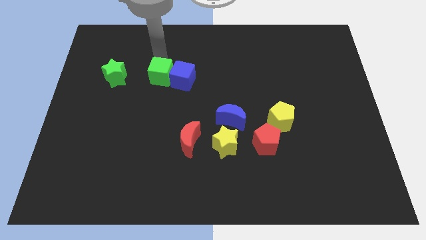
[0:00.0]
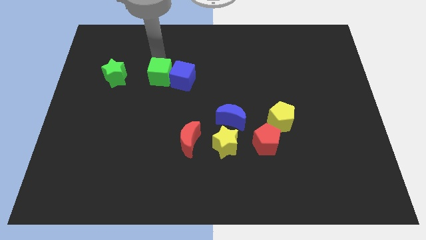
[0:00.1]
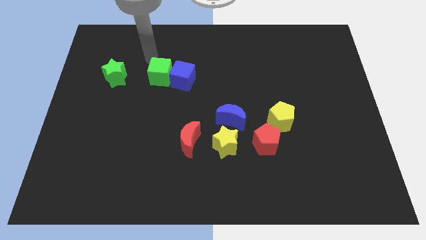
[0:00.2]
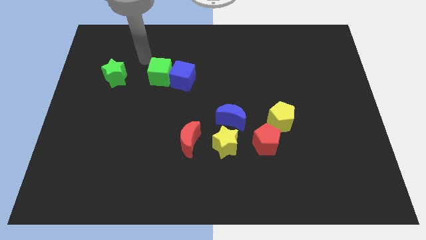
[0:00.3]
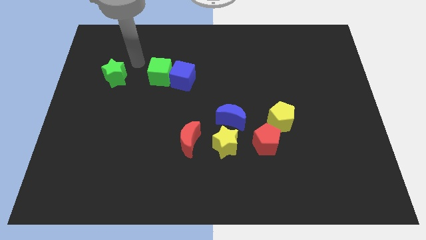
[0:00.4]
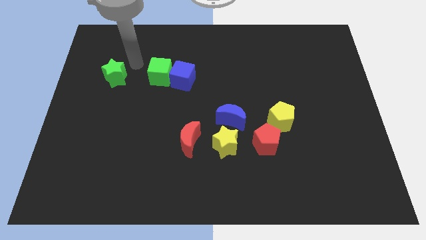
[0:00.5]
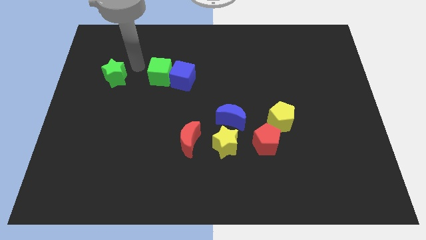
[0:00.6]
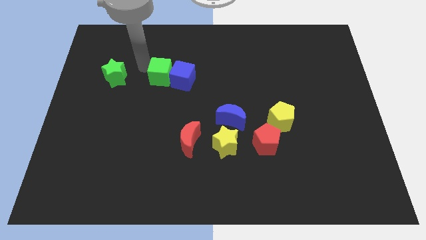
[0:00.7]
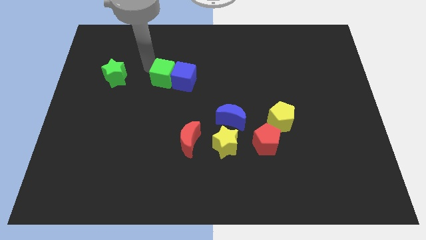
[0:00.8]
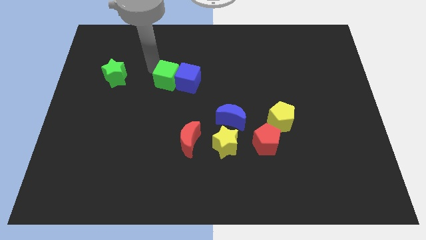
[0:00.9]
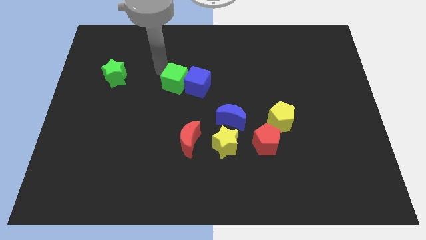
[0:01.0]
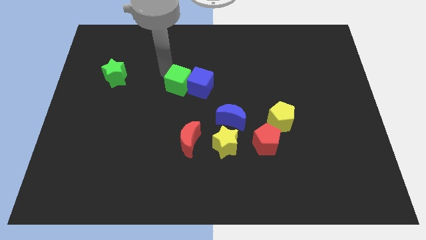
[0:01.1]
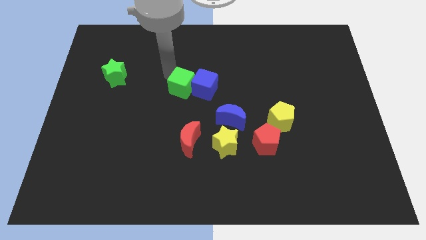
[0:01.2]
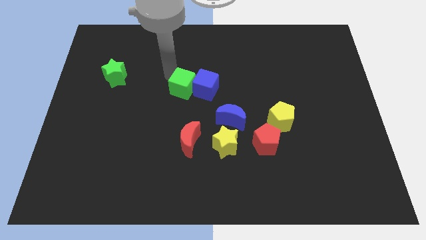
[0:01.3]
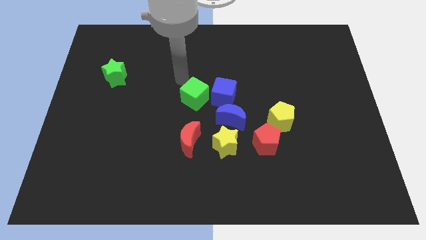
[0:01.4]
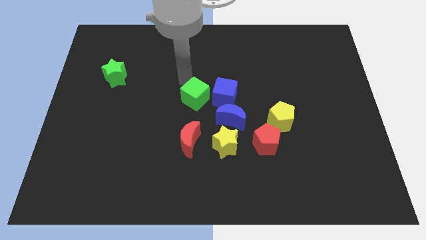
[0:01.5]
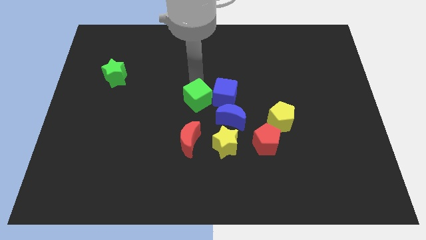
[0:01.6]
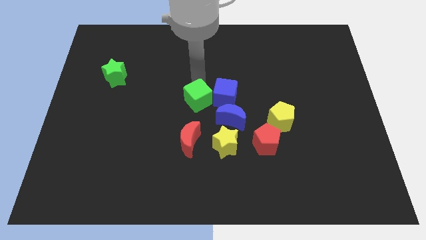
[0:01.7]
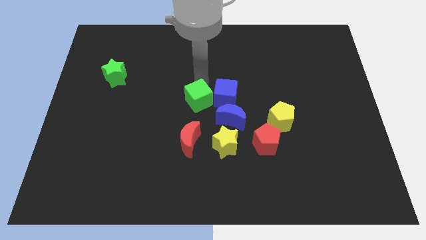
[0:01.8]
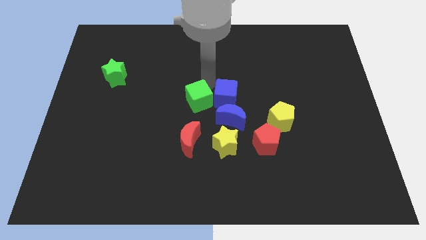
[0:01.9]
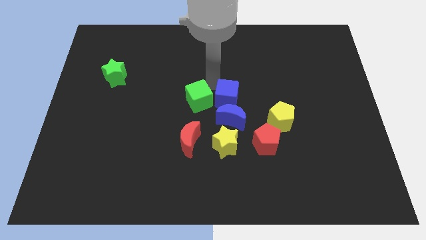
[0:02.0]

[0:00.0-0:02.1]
push green and blue cubes together towards center

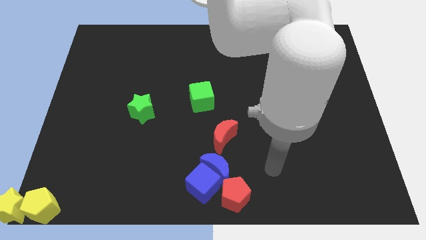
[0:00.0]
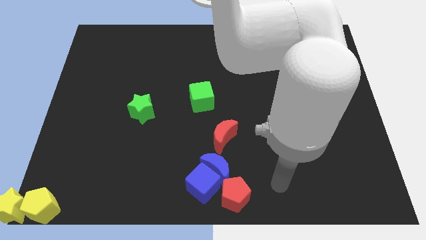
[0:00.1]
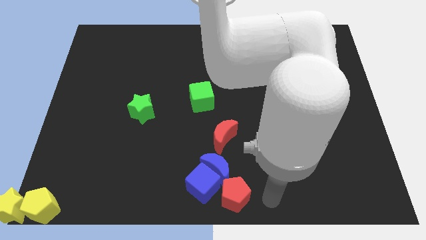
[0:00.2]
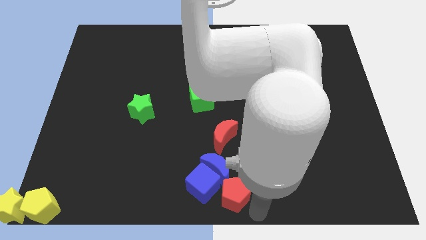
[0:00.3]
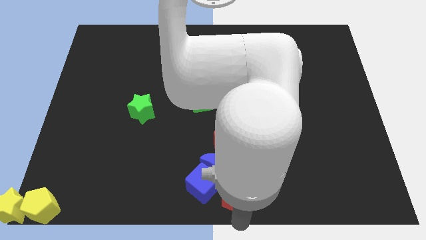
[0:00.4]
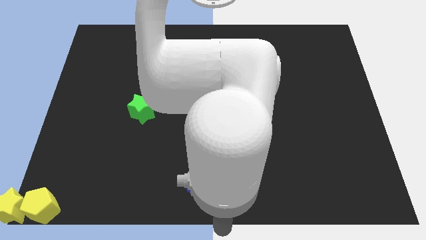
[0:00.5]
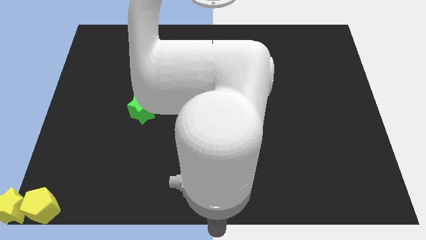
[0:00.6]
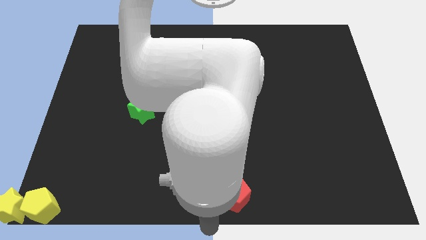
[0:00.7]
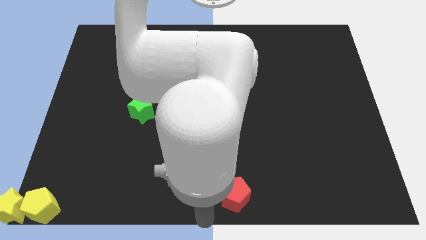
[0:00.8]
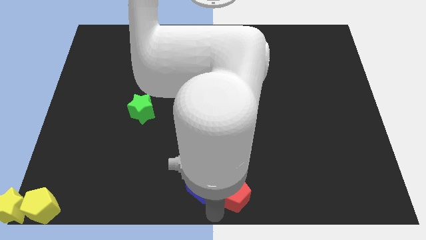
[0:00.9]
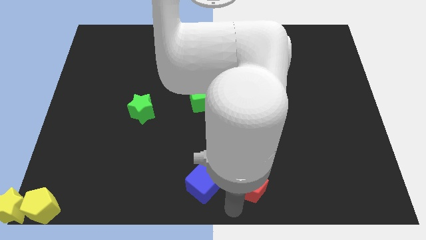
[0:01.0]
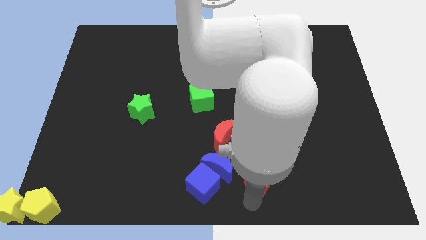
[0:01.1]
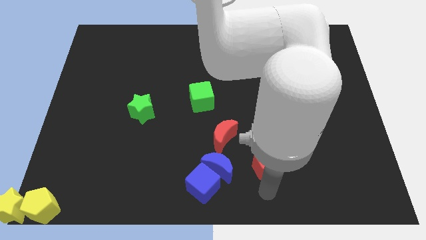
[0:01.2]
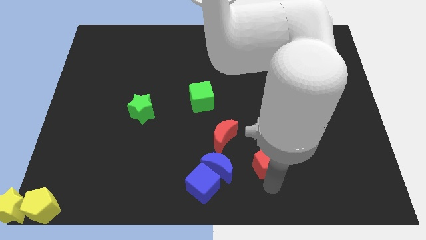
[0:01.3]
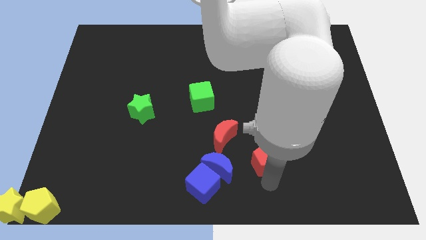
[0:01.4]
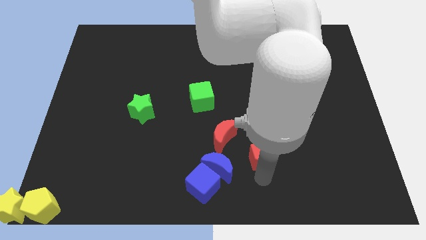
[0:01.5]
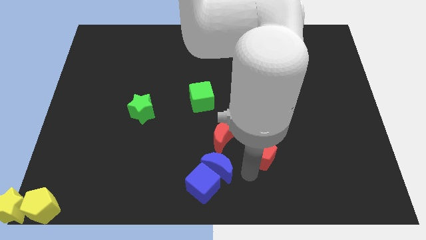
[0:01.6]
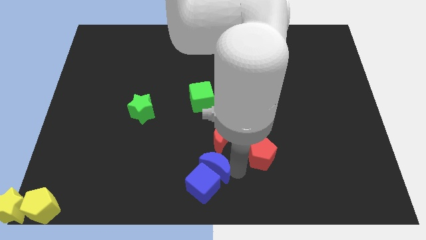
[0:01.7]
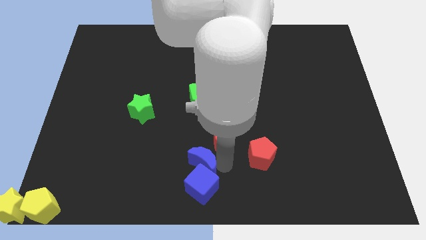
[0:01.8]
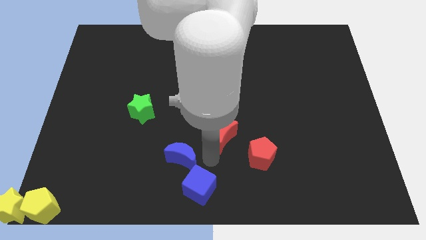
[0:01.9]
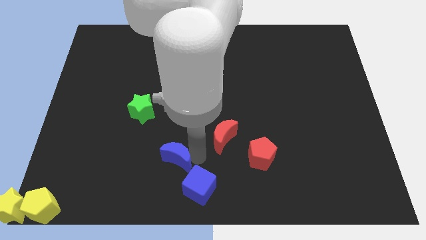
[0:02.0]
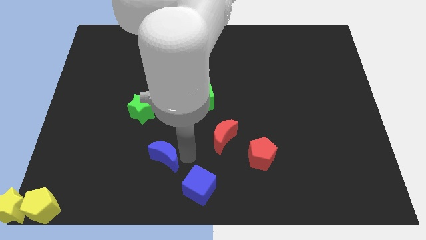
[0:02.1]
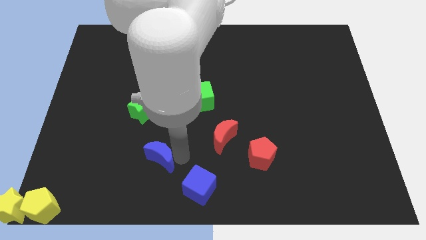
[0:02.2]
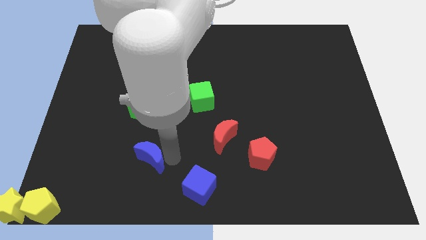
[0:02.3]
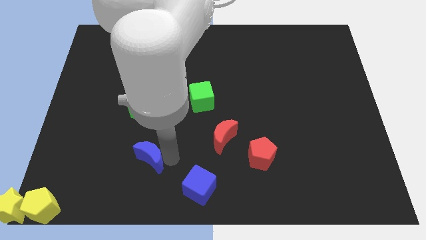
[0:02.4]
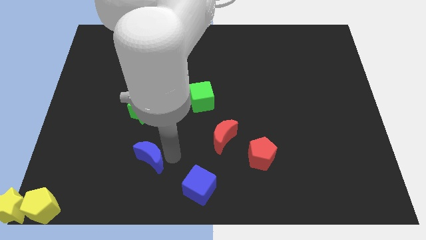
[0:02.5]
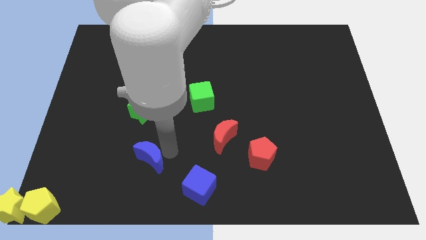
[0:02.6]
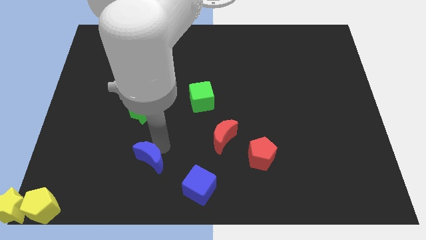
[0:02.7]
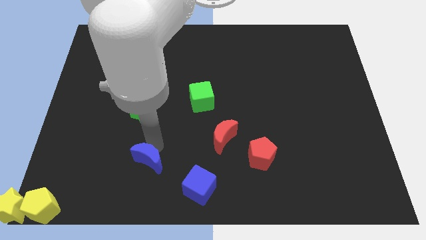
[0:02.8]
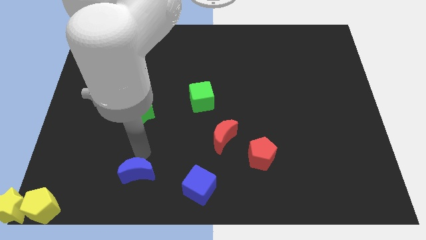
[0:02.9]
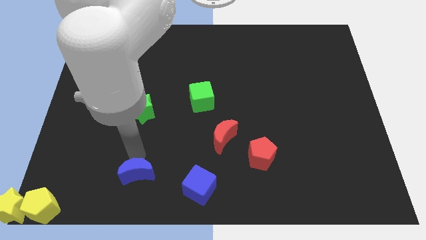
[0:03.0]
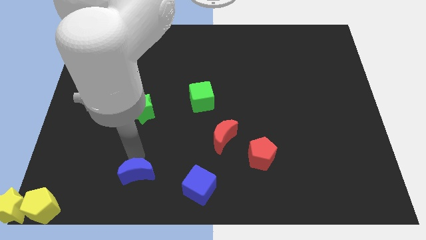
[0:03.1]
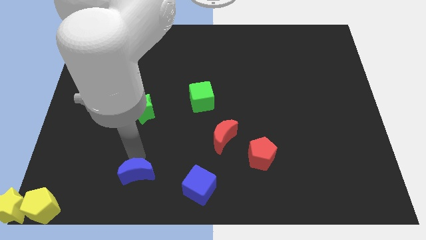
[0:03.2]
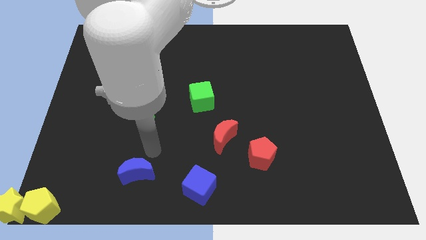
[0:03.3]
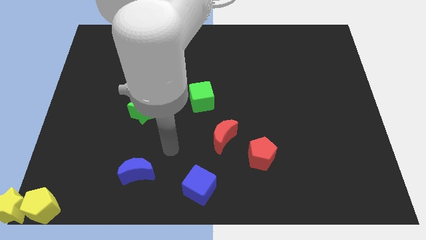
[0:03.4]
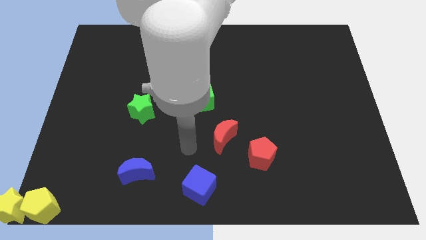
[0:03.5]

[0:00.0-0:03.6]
separate the red pentagon and blue moon towards left side

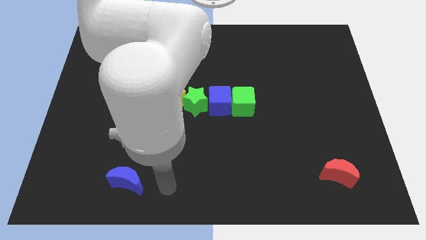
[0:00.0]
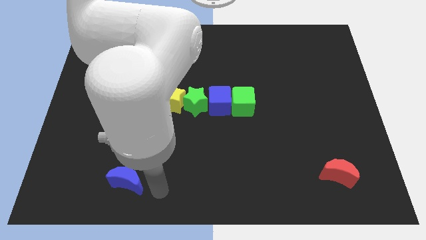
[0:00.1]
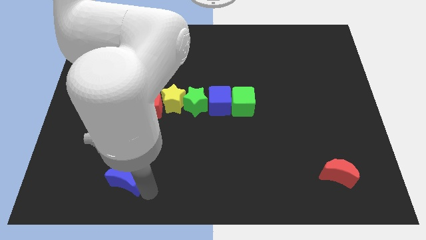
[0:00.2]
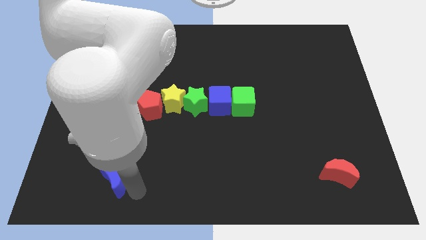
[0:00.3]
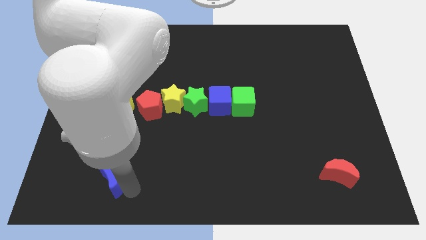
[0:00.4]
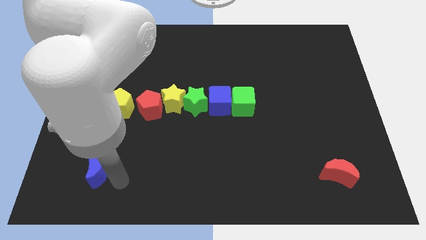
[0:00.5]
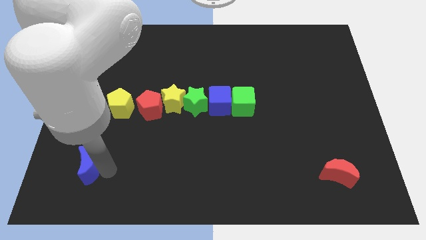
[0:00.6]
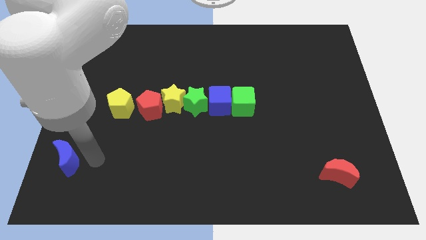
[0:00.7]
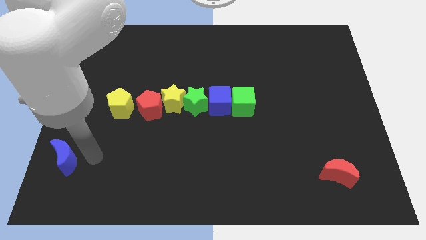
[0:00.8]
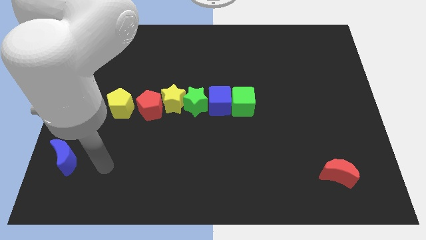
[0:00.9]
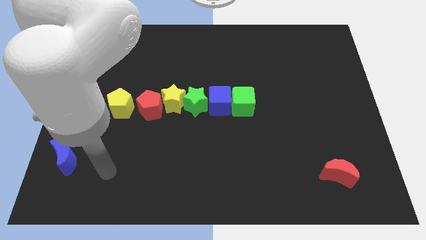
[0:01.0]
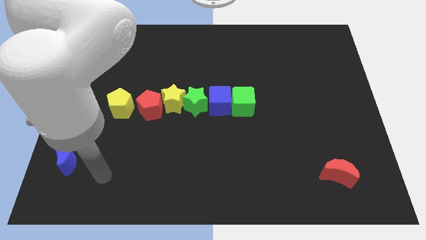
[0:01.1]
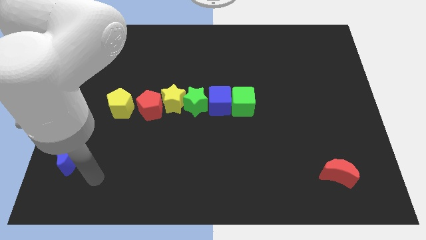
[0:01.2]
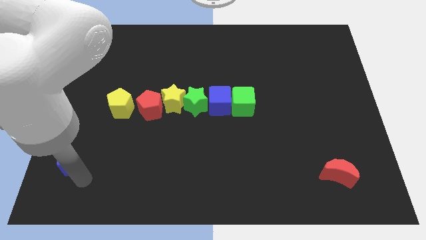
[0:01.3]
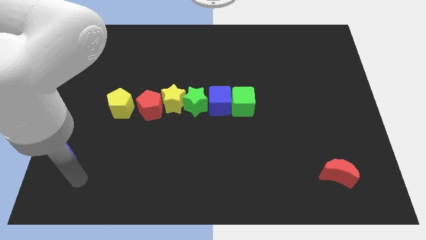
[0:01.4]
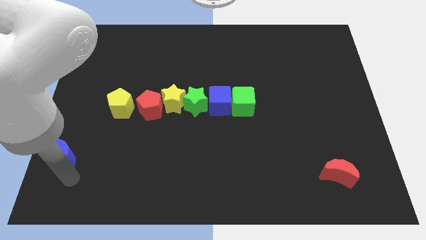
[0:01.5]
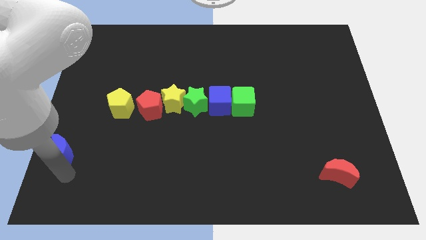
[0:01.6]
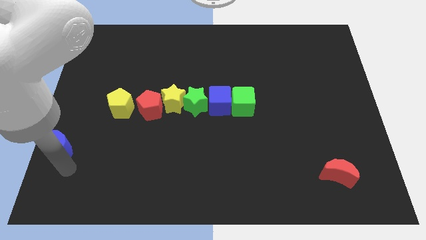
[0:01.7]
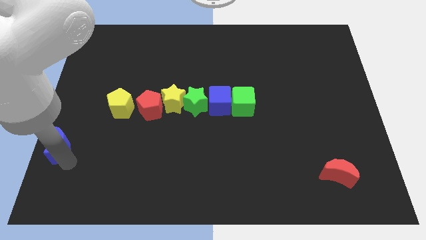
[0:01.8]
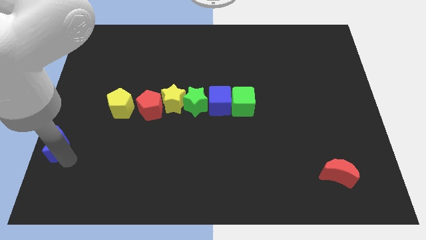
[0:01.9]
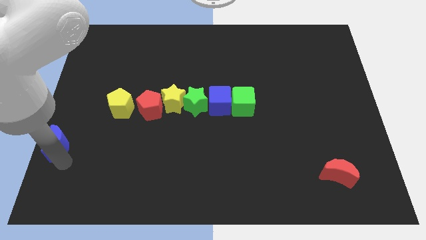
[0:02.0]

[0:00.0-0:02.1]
move the blue moon towards the left center of the board

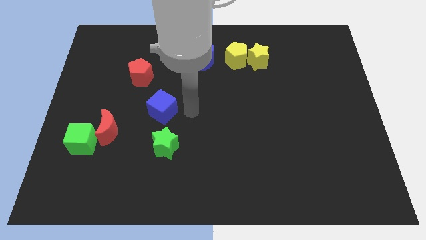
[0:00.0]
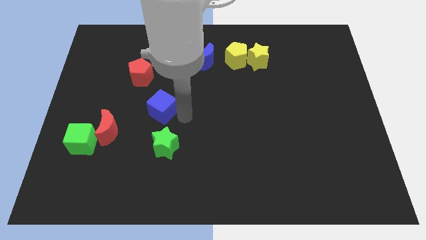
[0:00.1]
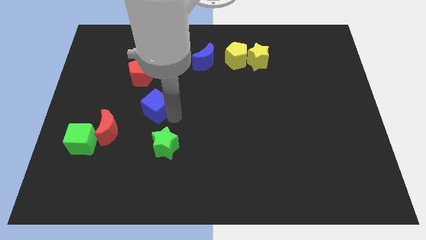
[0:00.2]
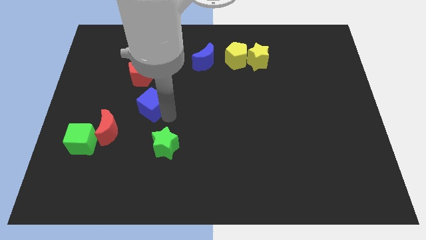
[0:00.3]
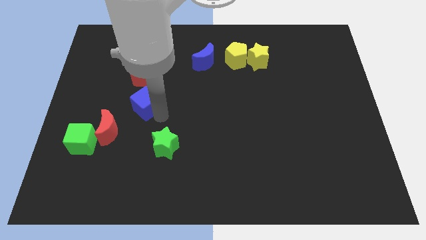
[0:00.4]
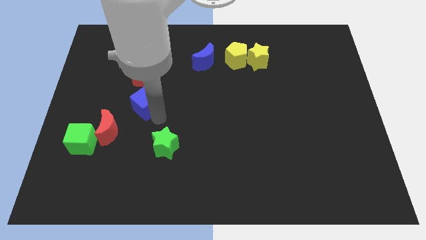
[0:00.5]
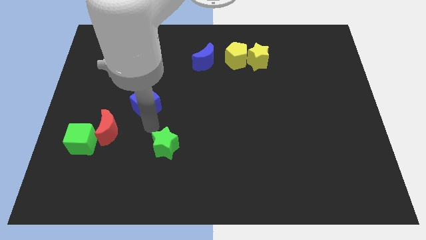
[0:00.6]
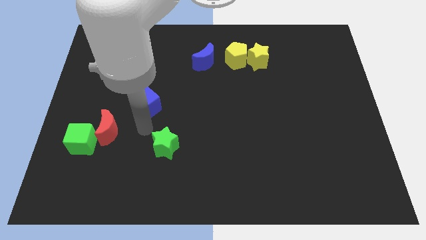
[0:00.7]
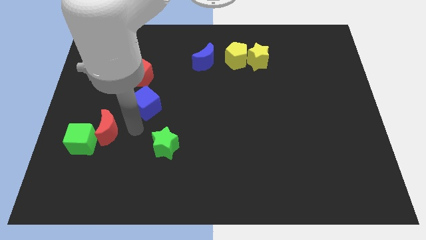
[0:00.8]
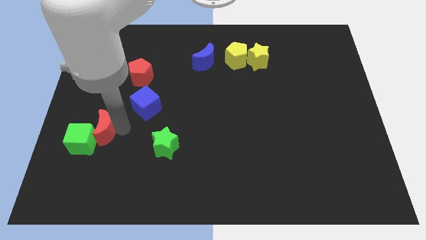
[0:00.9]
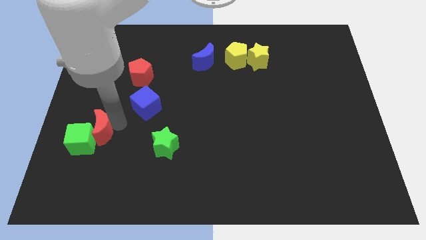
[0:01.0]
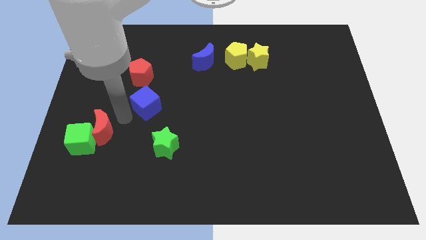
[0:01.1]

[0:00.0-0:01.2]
place the blue cube below the red pentagon
